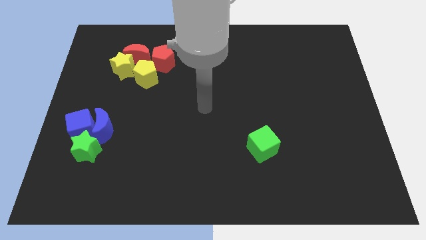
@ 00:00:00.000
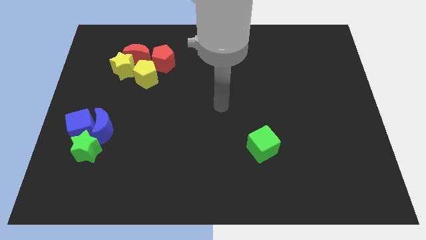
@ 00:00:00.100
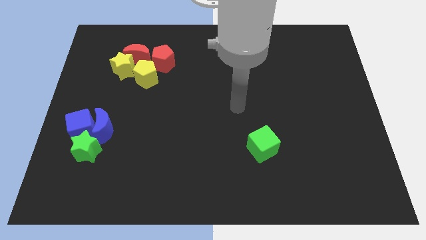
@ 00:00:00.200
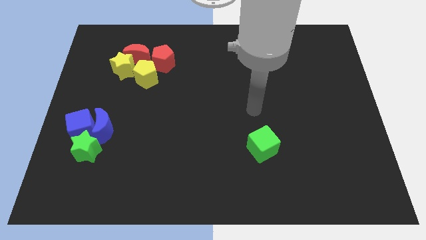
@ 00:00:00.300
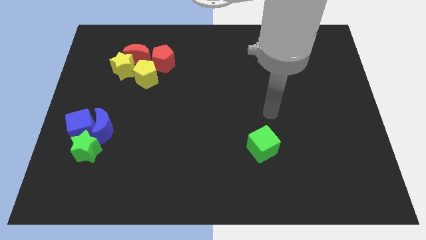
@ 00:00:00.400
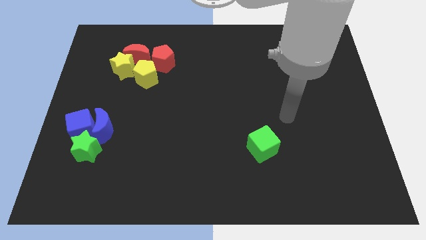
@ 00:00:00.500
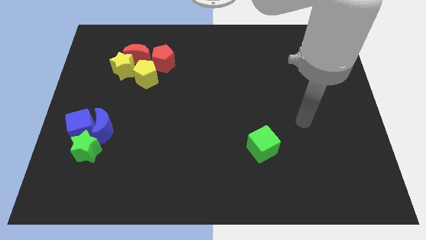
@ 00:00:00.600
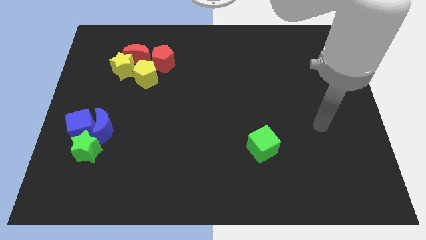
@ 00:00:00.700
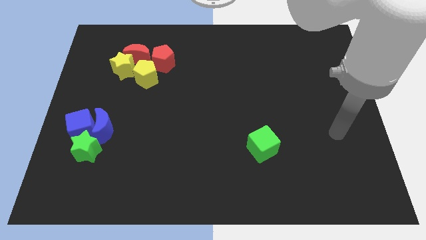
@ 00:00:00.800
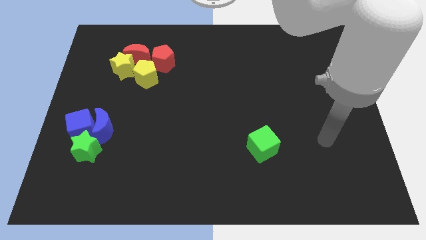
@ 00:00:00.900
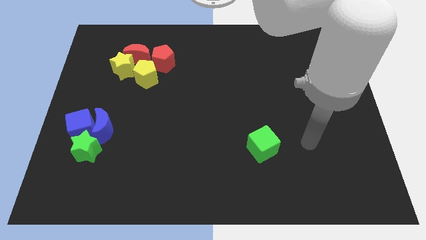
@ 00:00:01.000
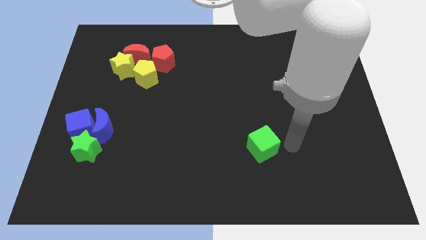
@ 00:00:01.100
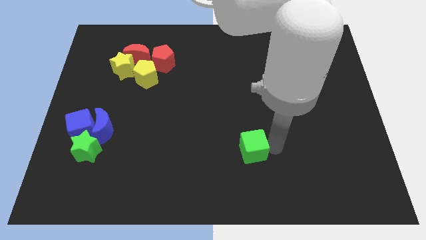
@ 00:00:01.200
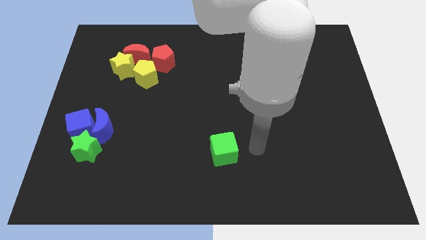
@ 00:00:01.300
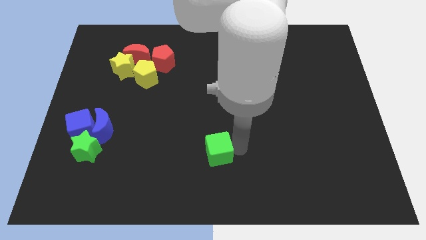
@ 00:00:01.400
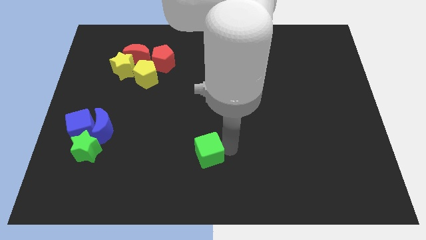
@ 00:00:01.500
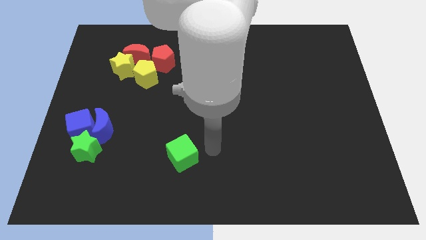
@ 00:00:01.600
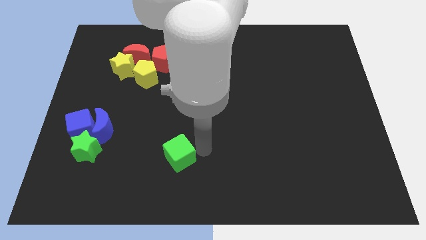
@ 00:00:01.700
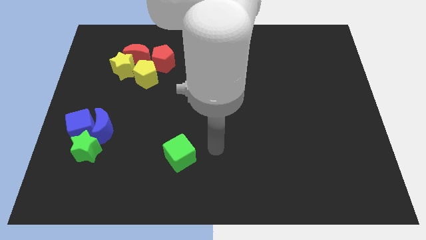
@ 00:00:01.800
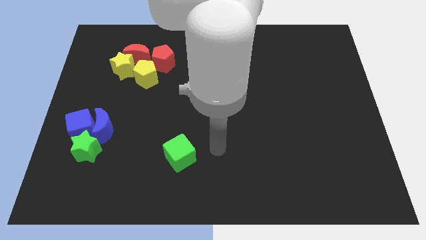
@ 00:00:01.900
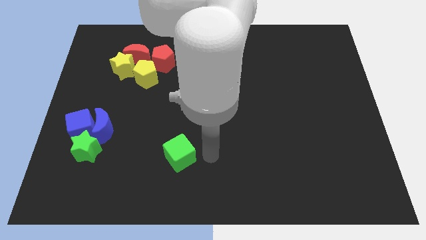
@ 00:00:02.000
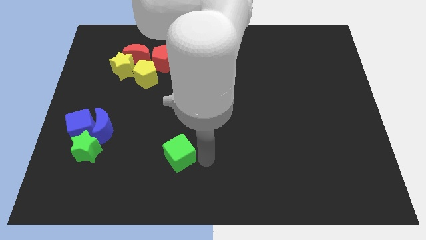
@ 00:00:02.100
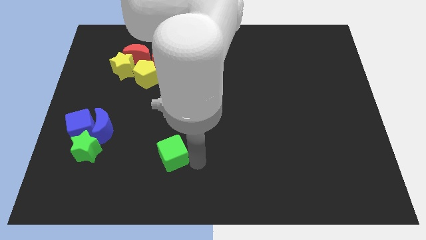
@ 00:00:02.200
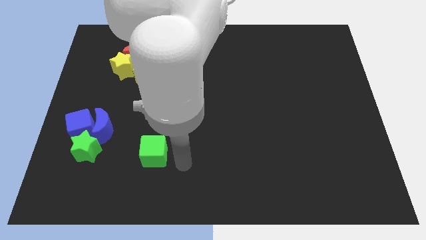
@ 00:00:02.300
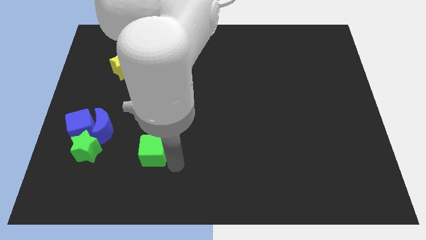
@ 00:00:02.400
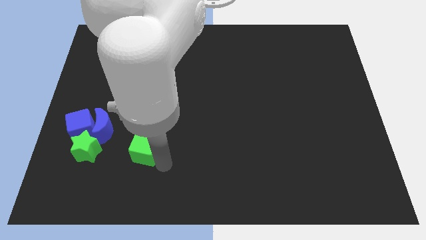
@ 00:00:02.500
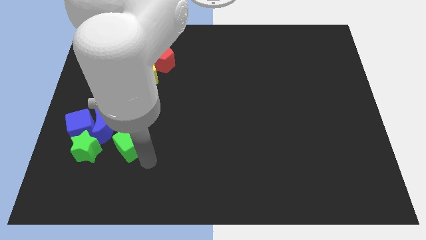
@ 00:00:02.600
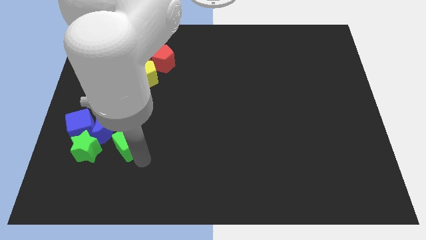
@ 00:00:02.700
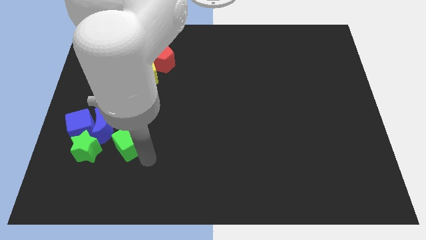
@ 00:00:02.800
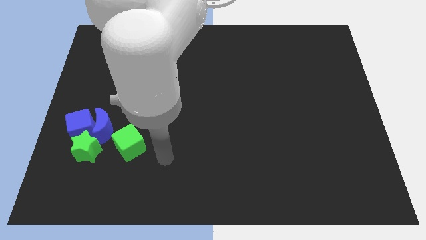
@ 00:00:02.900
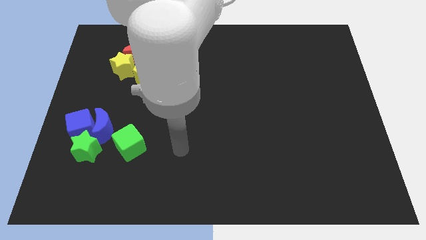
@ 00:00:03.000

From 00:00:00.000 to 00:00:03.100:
push green cube to the right of green star

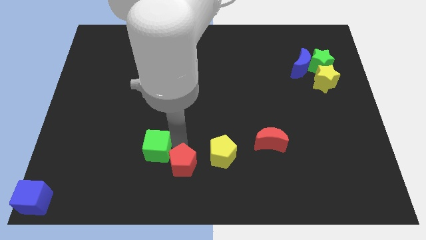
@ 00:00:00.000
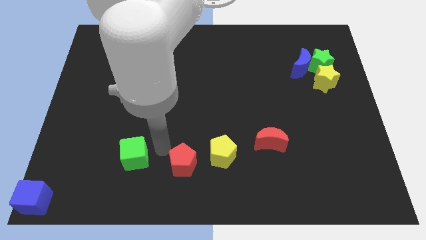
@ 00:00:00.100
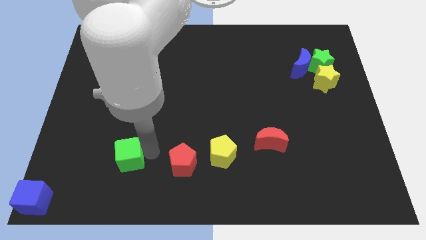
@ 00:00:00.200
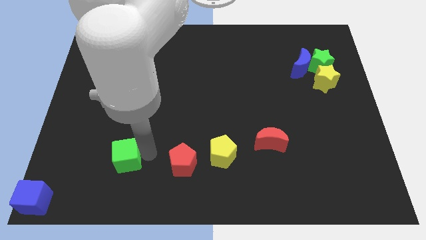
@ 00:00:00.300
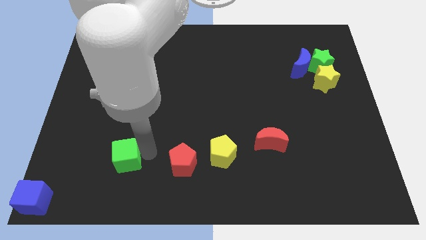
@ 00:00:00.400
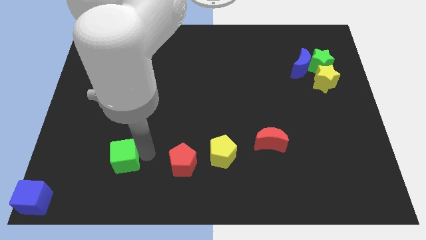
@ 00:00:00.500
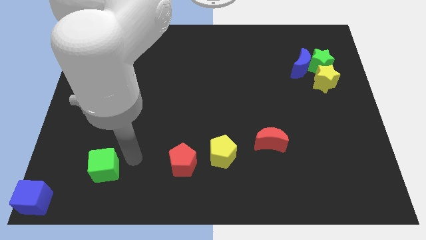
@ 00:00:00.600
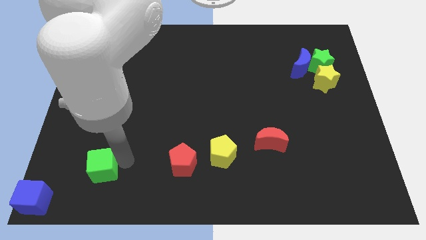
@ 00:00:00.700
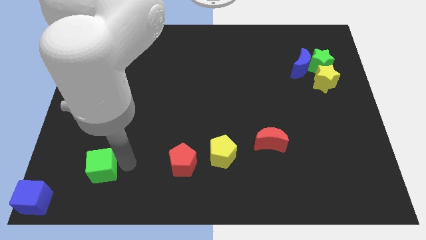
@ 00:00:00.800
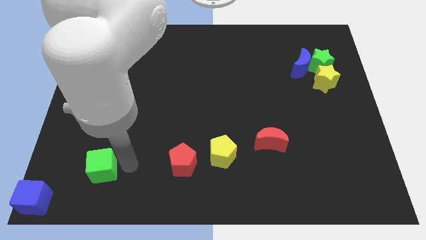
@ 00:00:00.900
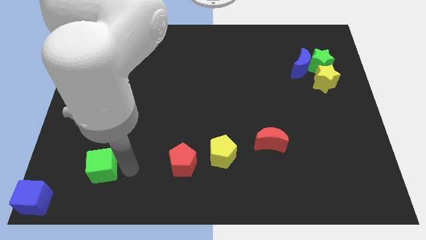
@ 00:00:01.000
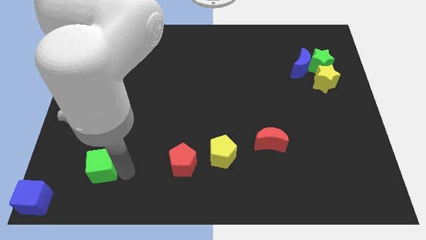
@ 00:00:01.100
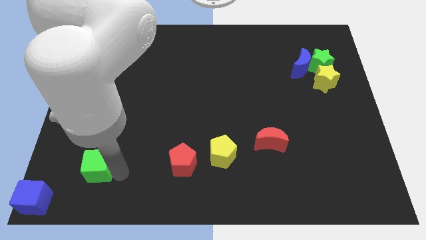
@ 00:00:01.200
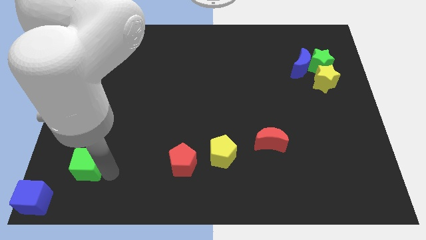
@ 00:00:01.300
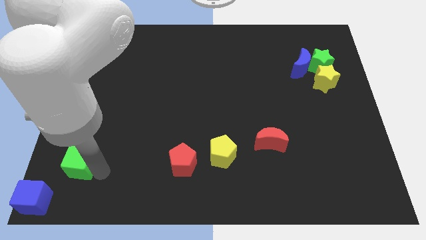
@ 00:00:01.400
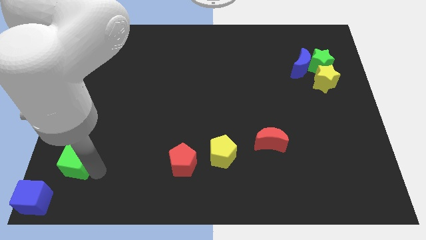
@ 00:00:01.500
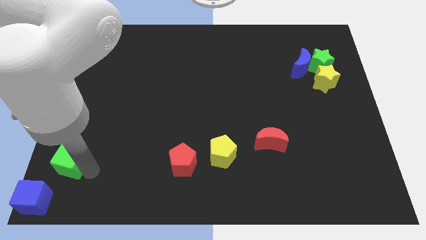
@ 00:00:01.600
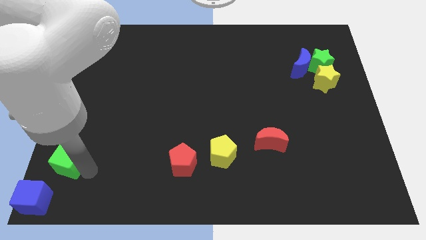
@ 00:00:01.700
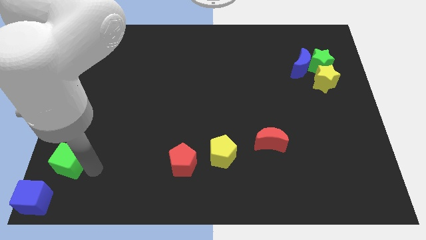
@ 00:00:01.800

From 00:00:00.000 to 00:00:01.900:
place green cube to the top right of the blue cube

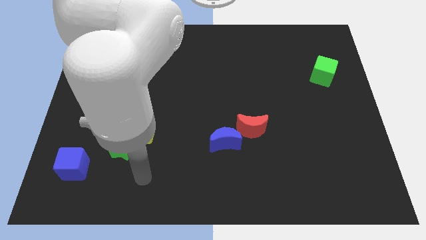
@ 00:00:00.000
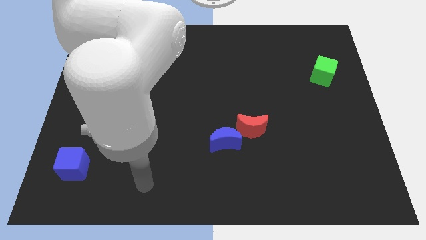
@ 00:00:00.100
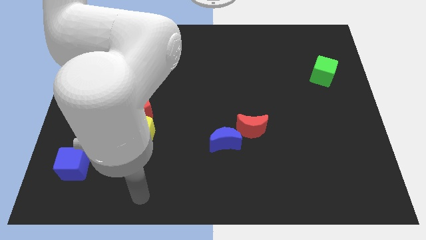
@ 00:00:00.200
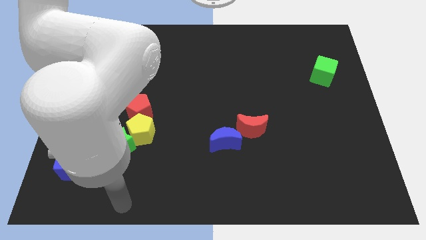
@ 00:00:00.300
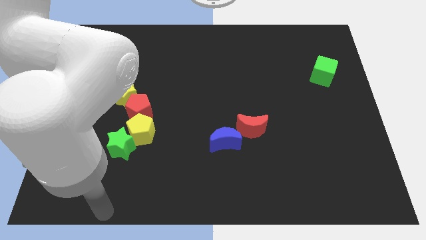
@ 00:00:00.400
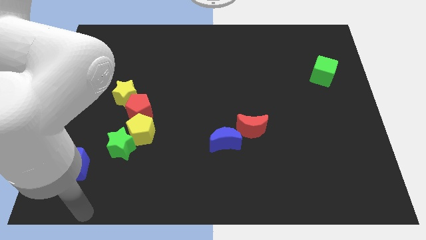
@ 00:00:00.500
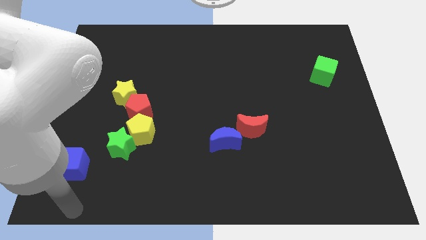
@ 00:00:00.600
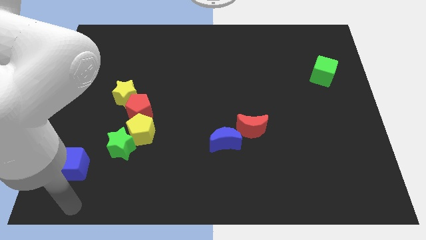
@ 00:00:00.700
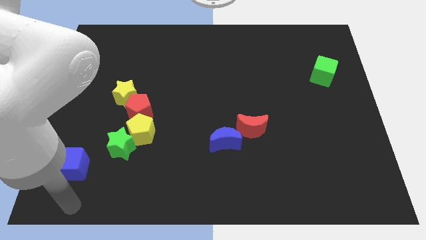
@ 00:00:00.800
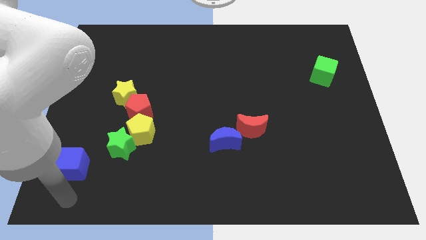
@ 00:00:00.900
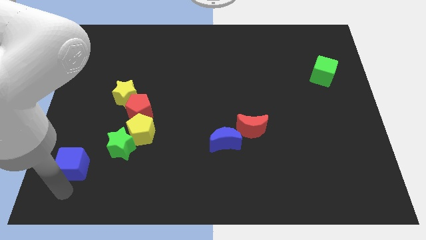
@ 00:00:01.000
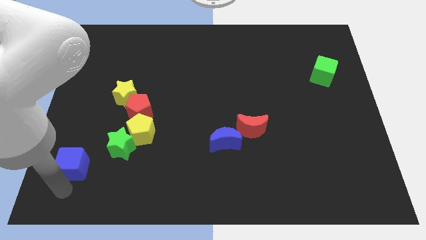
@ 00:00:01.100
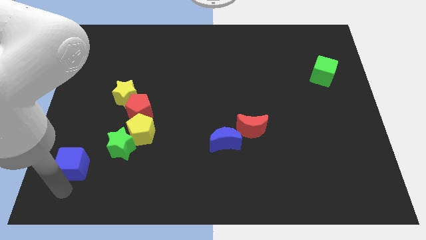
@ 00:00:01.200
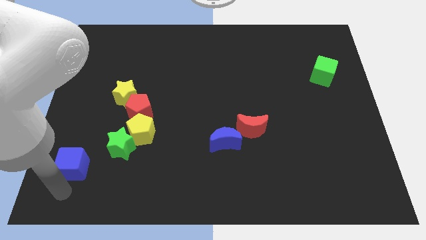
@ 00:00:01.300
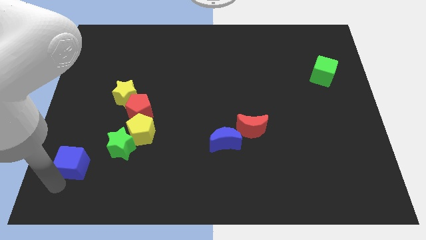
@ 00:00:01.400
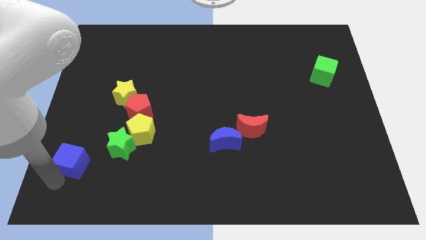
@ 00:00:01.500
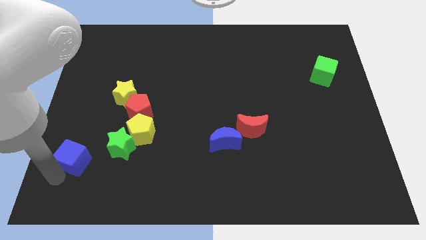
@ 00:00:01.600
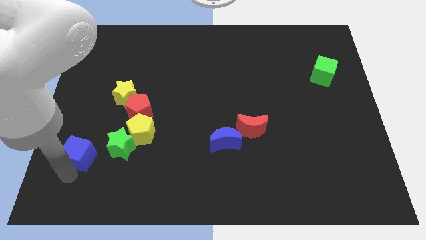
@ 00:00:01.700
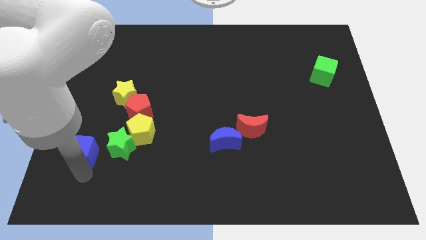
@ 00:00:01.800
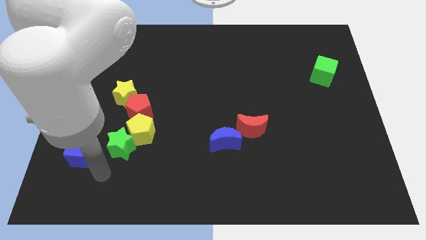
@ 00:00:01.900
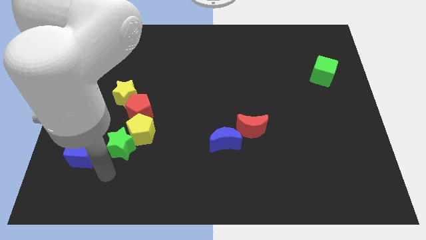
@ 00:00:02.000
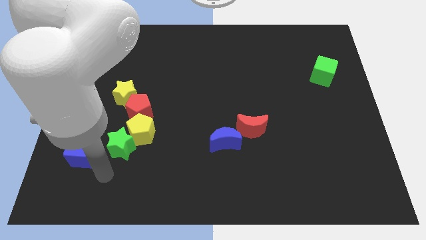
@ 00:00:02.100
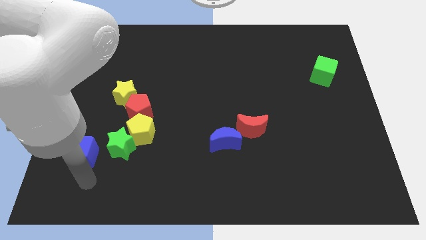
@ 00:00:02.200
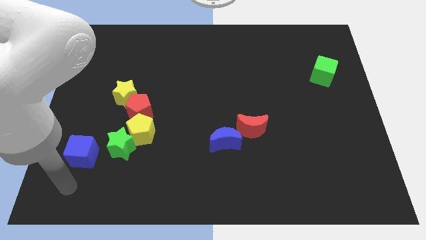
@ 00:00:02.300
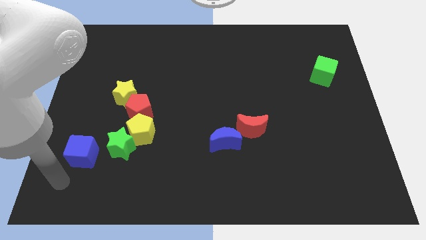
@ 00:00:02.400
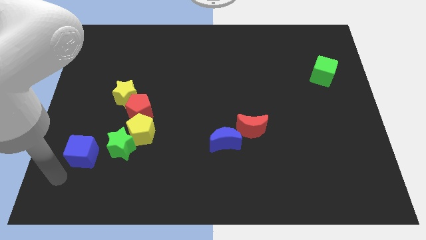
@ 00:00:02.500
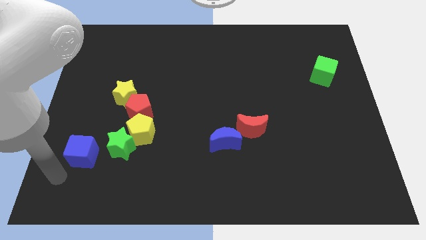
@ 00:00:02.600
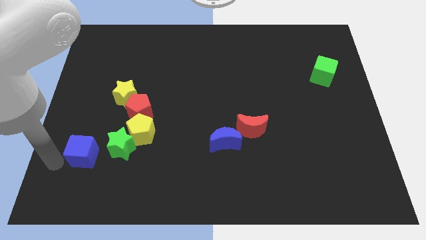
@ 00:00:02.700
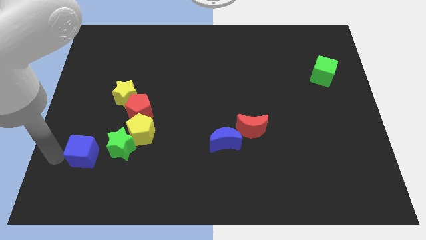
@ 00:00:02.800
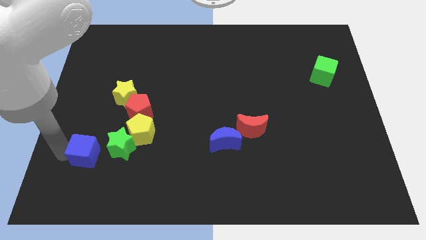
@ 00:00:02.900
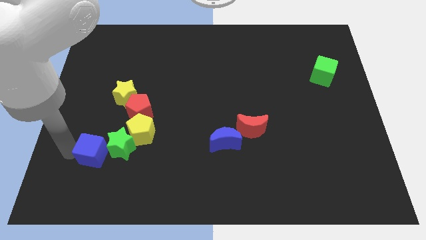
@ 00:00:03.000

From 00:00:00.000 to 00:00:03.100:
push the blue cube to the left of the green star

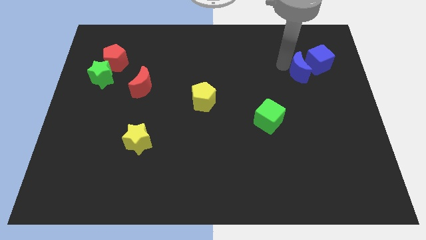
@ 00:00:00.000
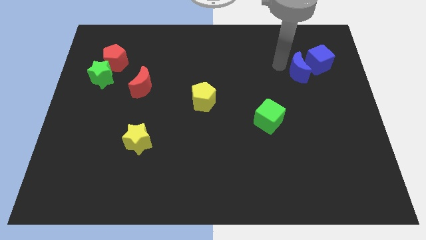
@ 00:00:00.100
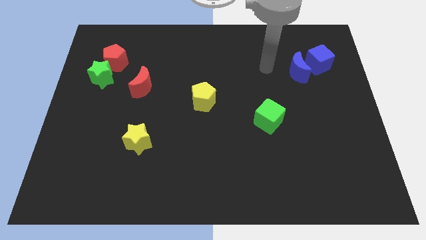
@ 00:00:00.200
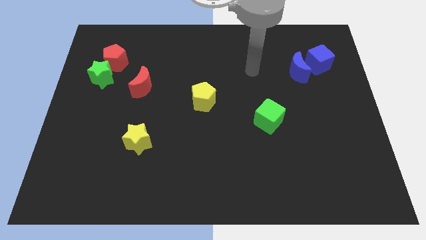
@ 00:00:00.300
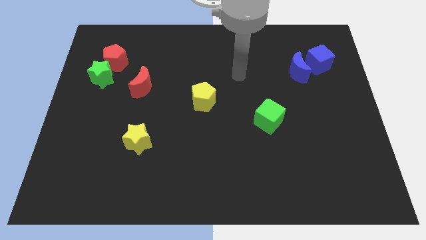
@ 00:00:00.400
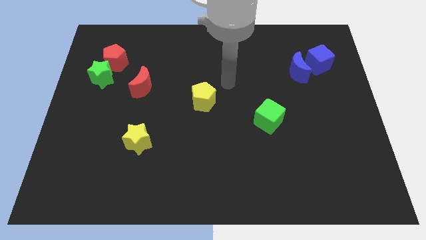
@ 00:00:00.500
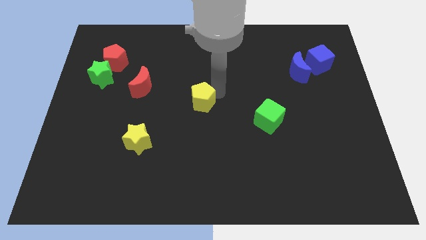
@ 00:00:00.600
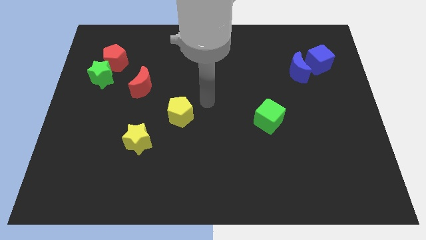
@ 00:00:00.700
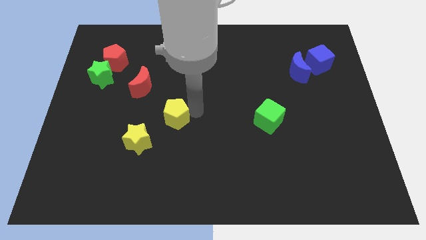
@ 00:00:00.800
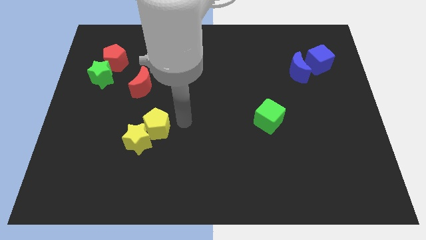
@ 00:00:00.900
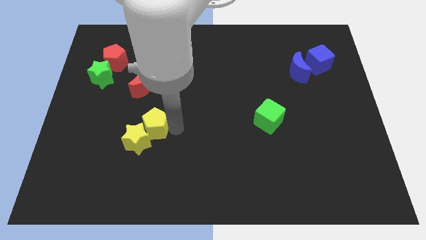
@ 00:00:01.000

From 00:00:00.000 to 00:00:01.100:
drag the yellow pentagon into the top right side of the yellow star
